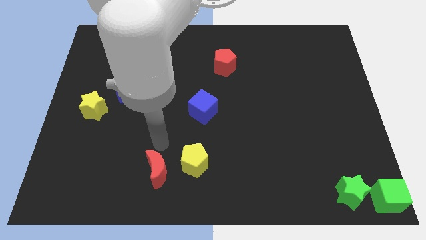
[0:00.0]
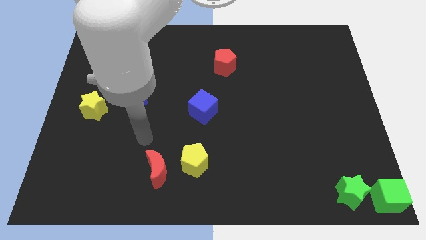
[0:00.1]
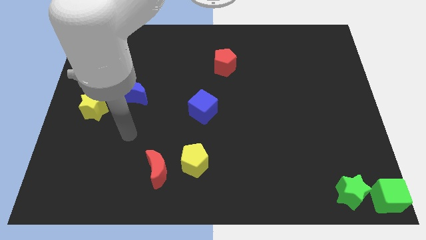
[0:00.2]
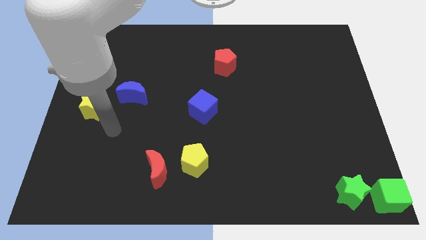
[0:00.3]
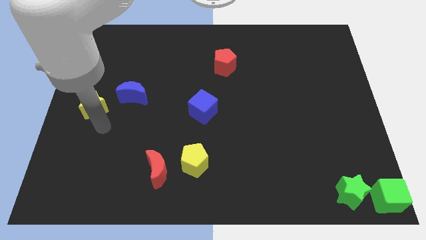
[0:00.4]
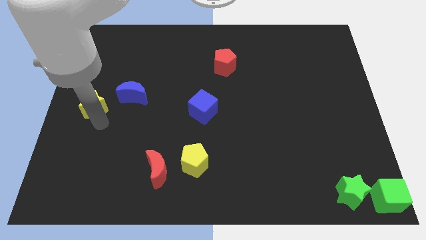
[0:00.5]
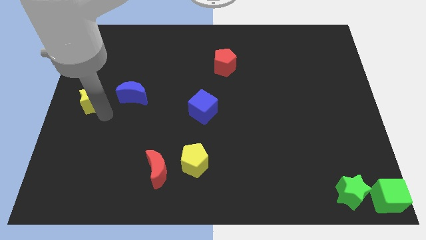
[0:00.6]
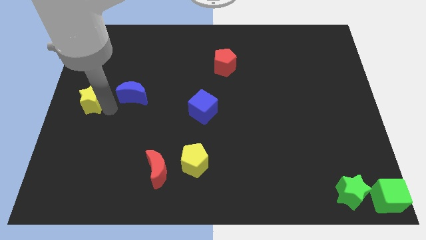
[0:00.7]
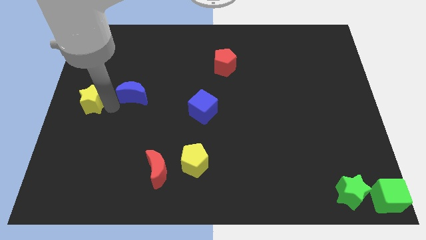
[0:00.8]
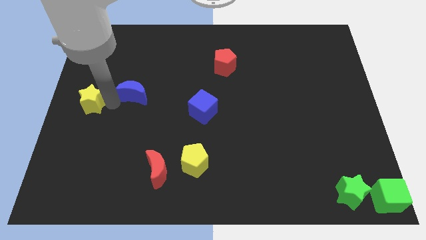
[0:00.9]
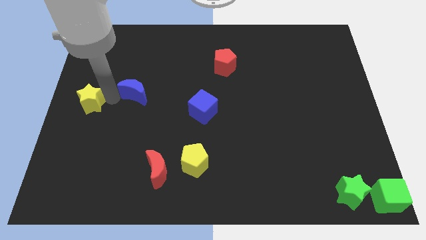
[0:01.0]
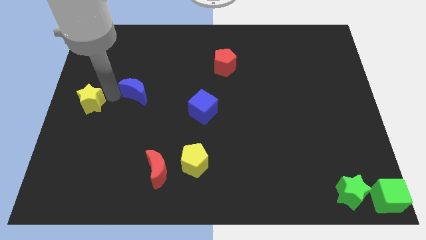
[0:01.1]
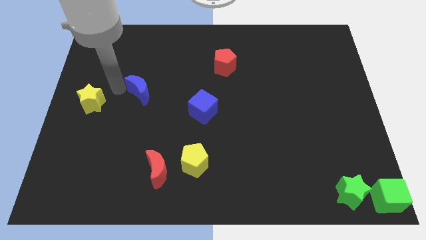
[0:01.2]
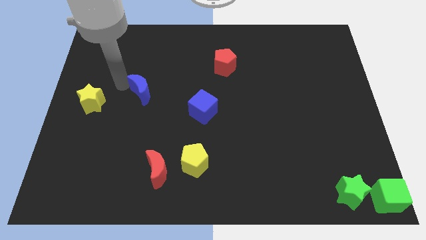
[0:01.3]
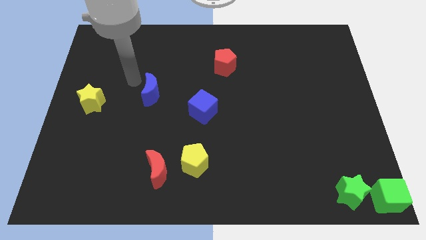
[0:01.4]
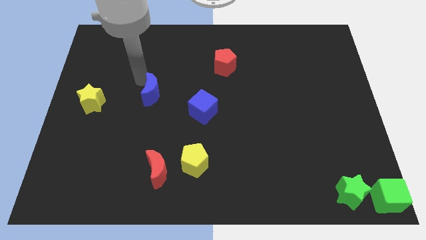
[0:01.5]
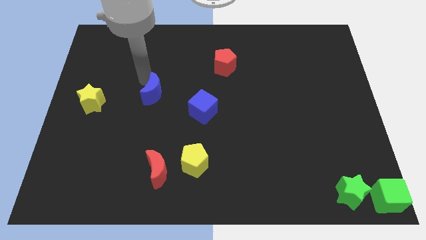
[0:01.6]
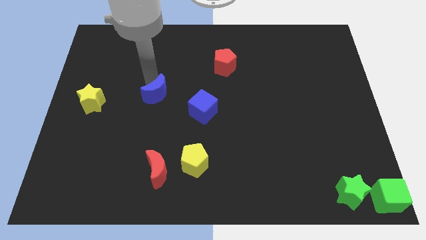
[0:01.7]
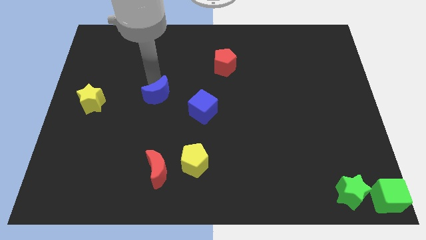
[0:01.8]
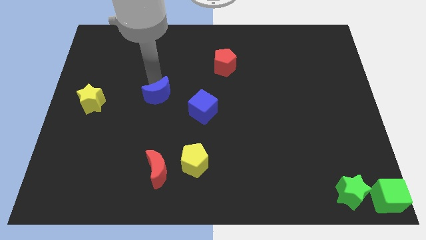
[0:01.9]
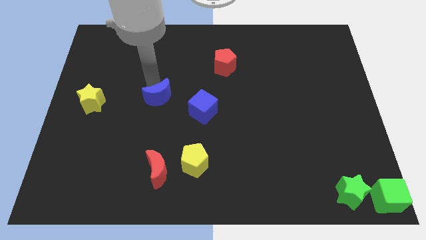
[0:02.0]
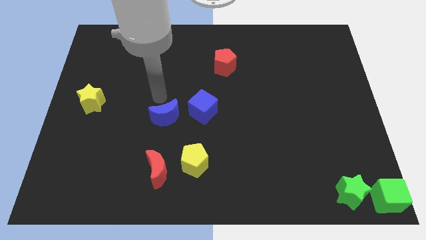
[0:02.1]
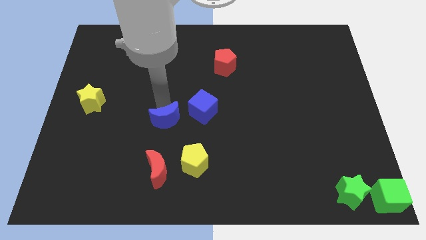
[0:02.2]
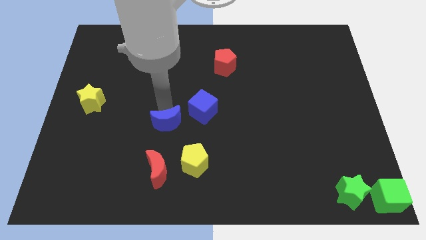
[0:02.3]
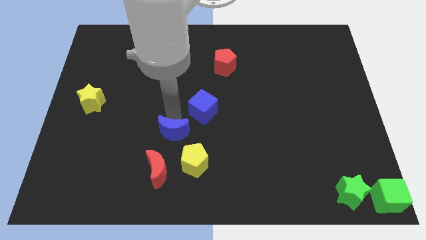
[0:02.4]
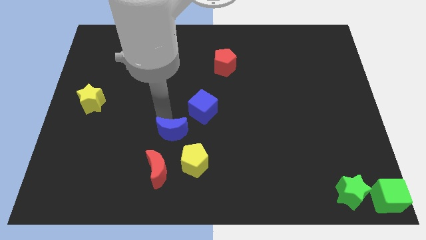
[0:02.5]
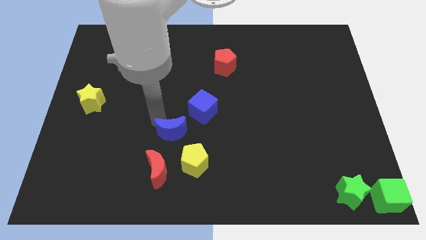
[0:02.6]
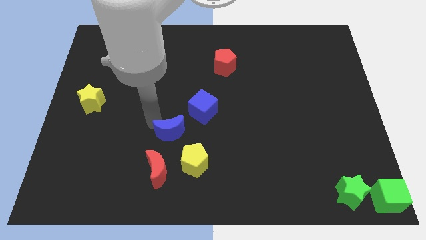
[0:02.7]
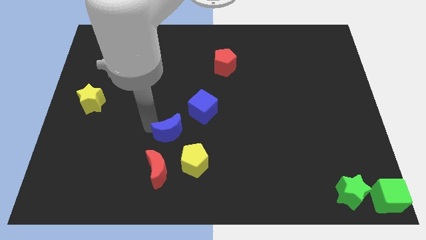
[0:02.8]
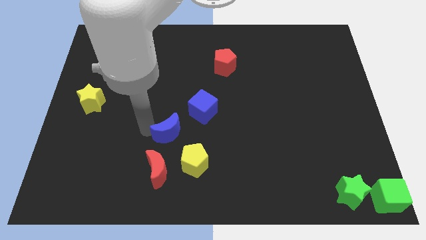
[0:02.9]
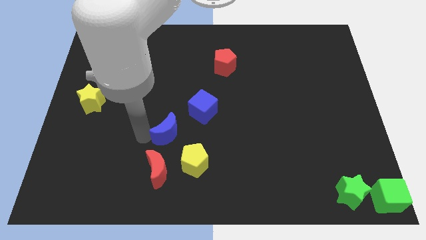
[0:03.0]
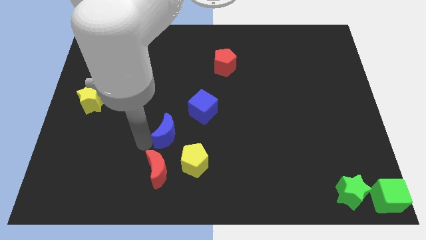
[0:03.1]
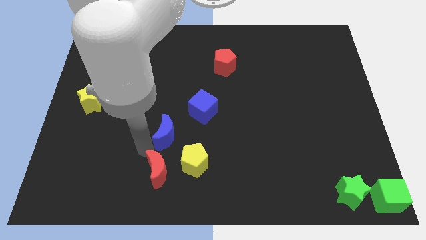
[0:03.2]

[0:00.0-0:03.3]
push the blue crescent above the red crescent

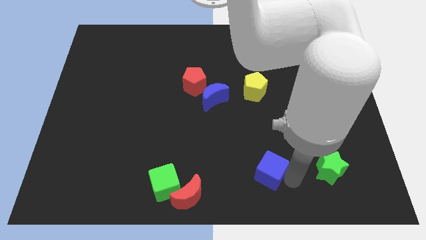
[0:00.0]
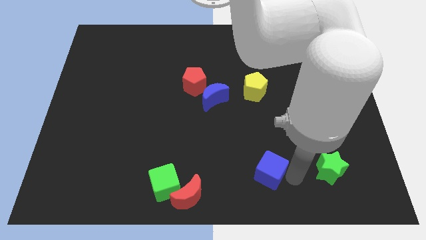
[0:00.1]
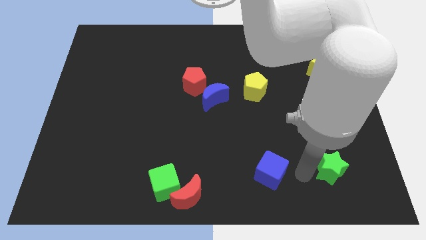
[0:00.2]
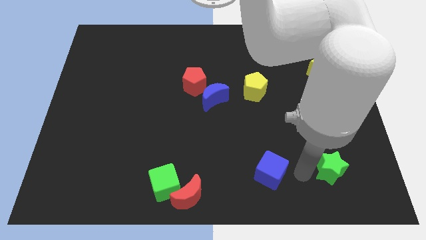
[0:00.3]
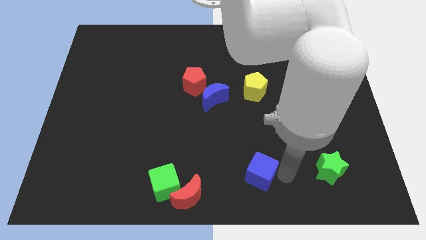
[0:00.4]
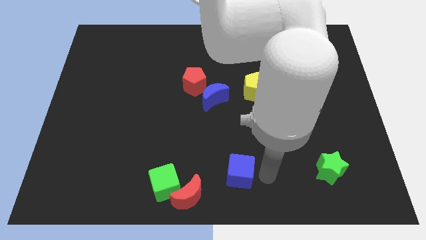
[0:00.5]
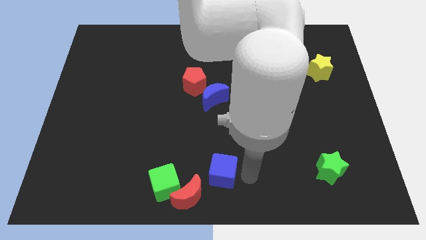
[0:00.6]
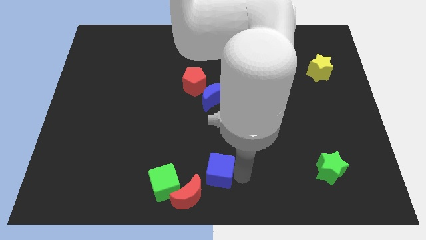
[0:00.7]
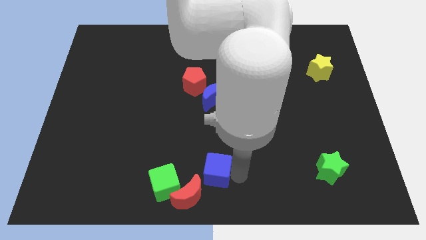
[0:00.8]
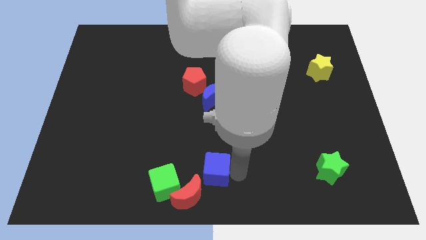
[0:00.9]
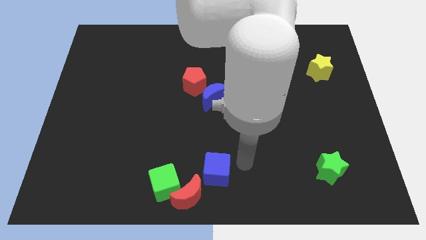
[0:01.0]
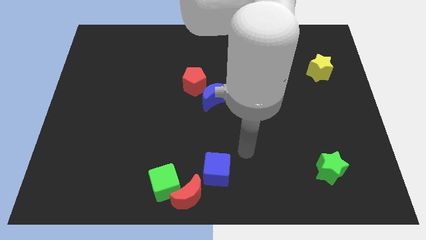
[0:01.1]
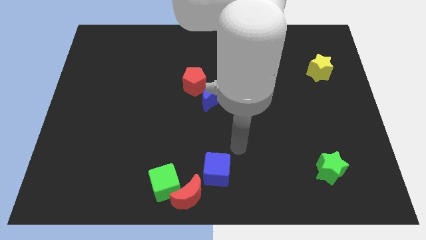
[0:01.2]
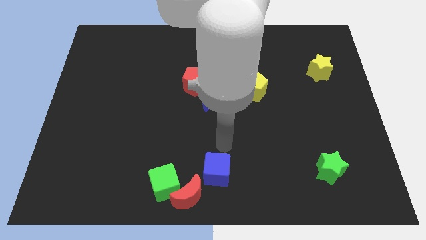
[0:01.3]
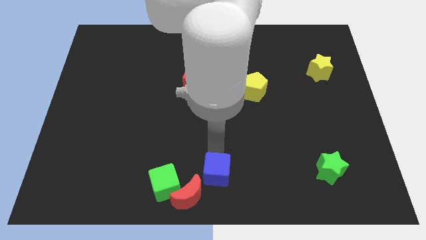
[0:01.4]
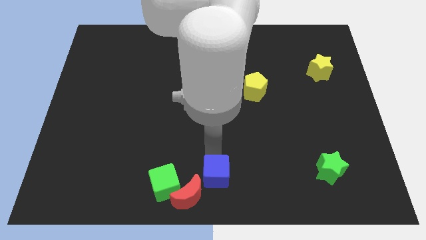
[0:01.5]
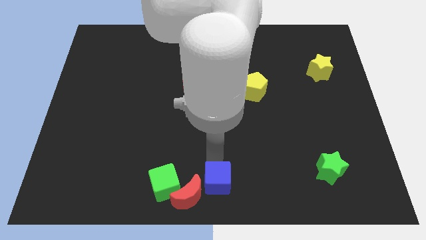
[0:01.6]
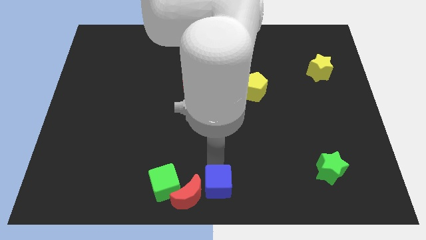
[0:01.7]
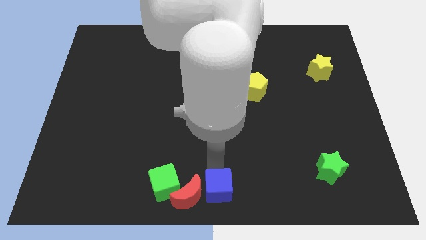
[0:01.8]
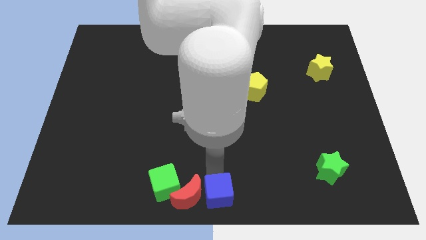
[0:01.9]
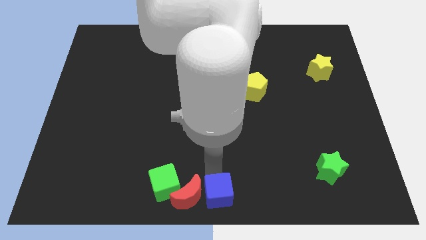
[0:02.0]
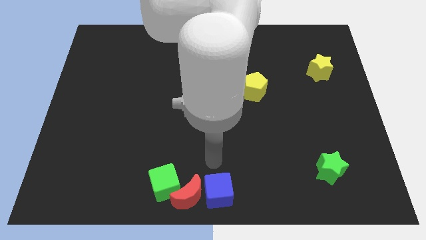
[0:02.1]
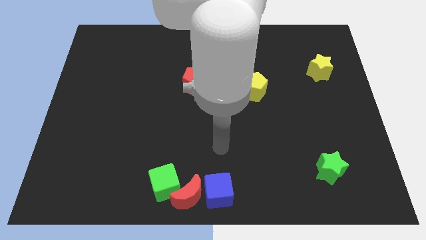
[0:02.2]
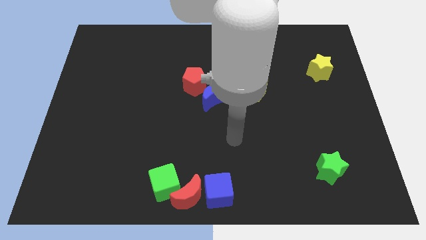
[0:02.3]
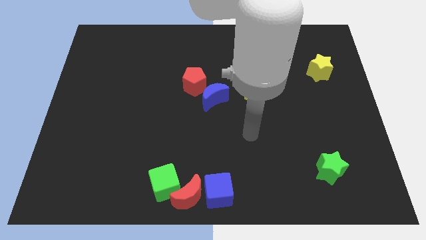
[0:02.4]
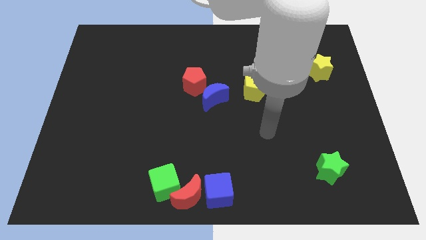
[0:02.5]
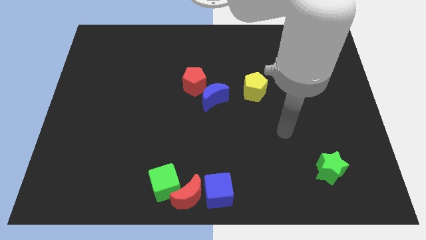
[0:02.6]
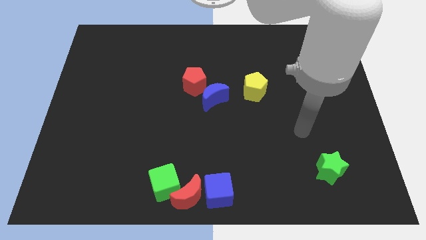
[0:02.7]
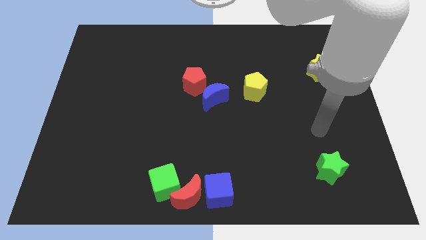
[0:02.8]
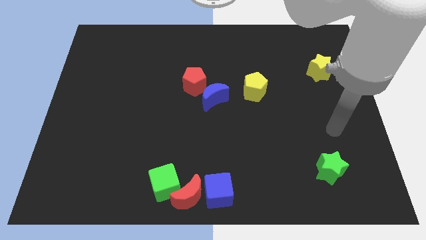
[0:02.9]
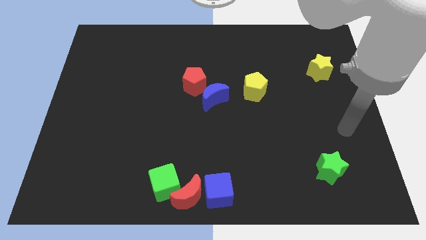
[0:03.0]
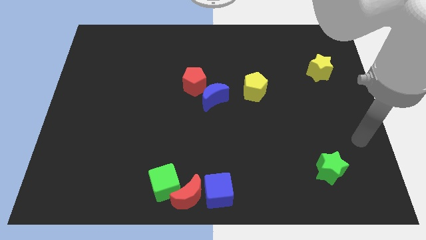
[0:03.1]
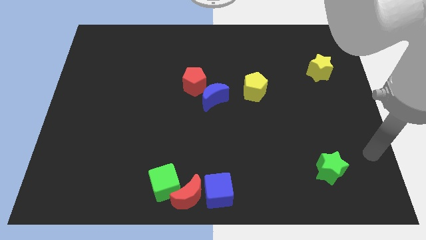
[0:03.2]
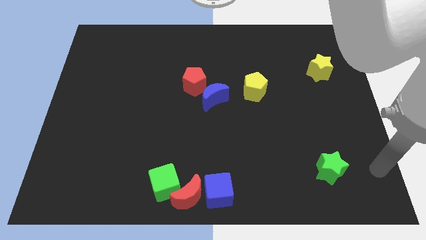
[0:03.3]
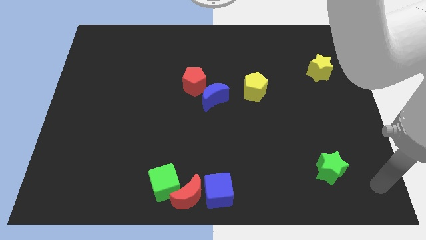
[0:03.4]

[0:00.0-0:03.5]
put the blue cube at the bottom center of the board

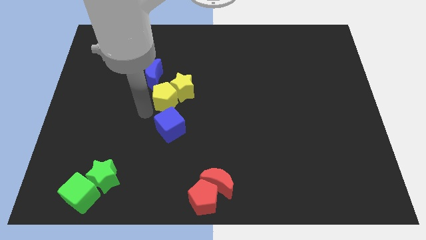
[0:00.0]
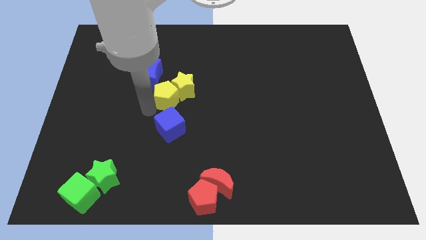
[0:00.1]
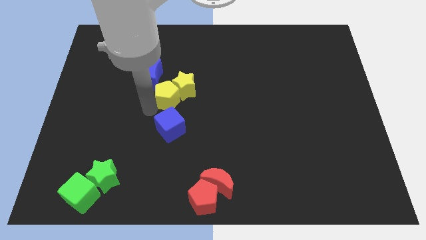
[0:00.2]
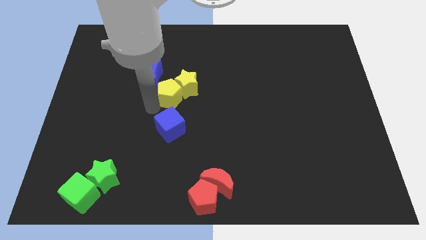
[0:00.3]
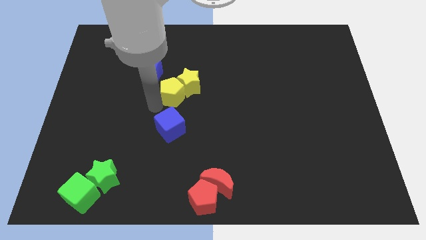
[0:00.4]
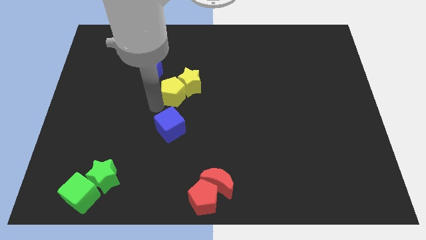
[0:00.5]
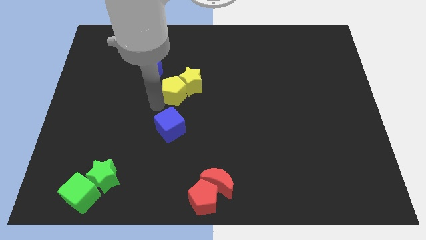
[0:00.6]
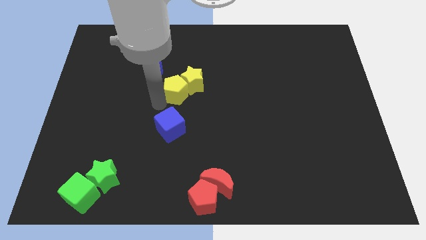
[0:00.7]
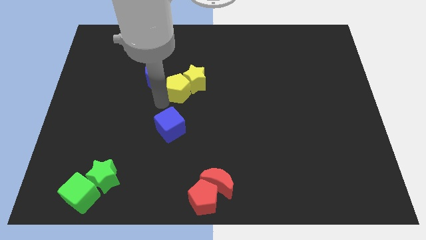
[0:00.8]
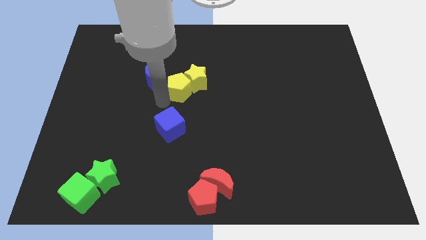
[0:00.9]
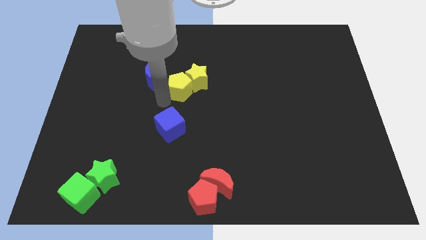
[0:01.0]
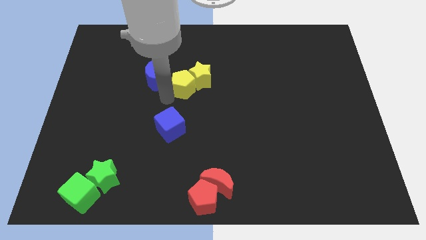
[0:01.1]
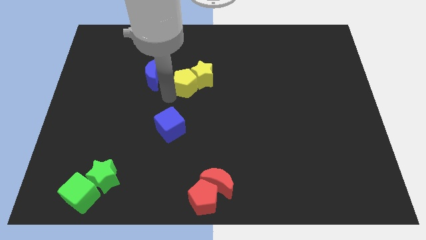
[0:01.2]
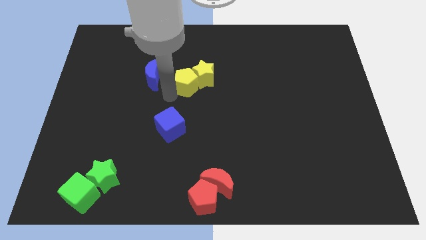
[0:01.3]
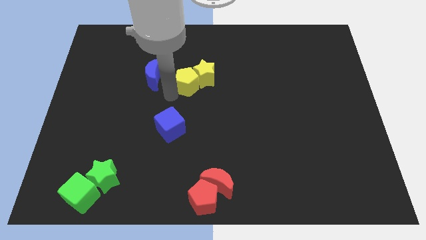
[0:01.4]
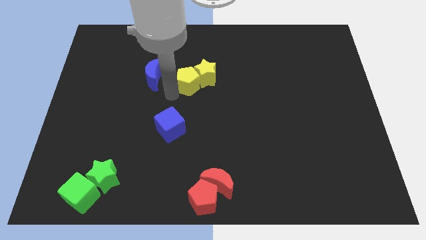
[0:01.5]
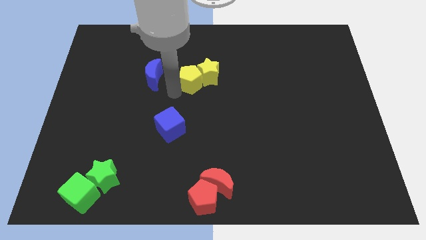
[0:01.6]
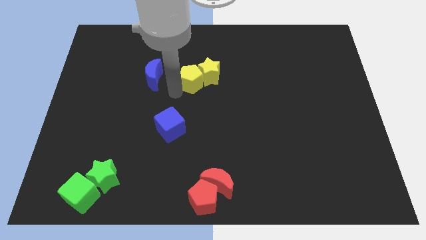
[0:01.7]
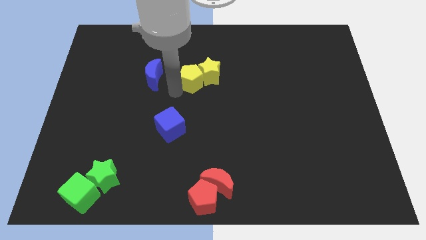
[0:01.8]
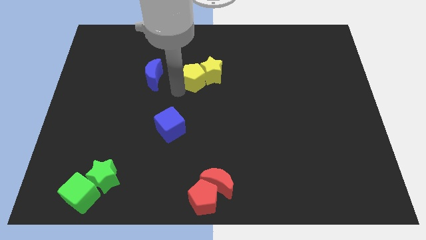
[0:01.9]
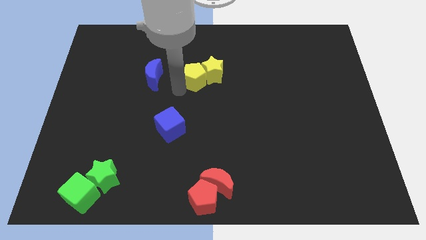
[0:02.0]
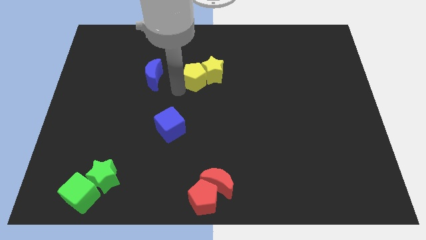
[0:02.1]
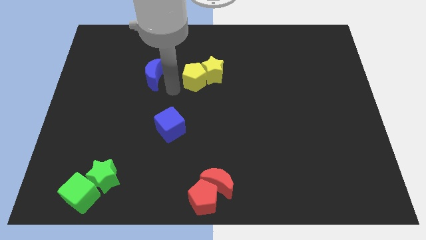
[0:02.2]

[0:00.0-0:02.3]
separate the yellow blocks from blue blocks
